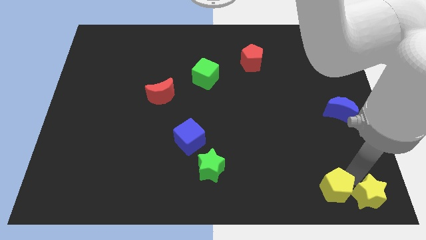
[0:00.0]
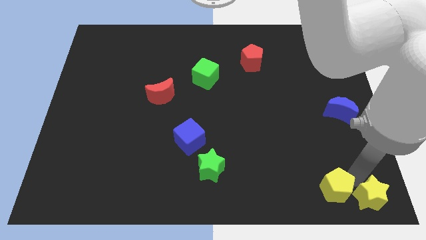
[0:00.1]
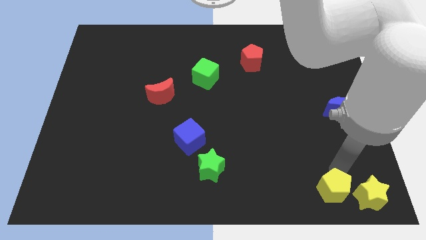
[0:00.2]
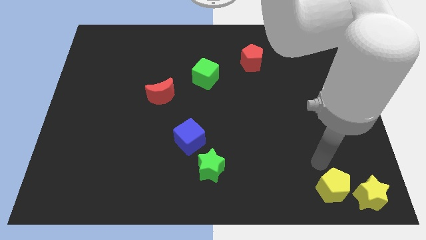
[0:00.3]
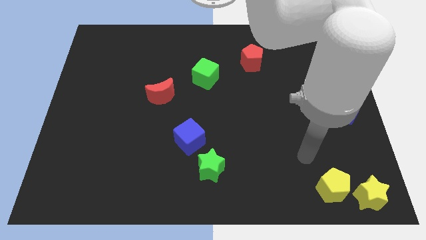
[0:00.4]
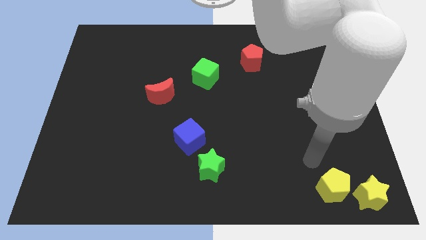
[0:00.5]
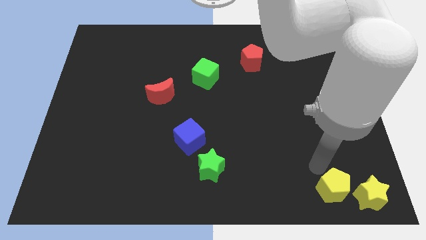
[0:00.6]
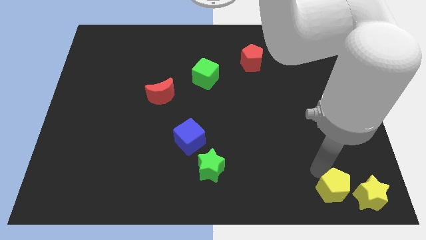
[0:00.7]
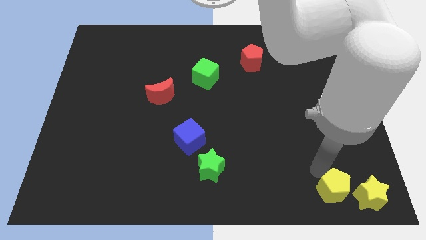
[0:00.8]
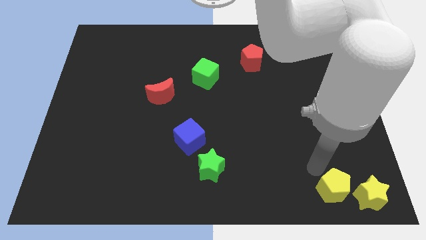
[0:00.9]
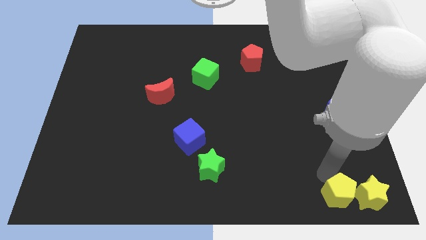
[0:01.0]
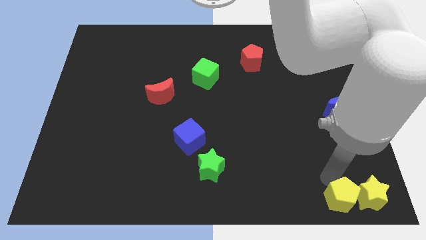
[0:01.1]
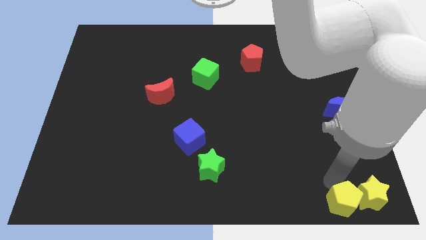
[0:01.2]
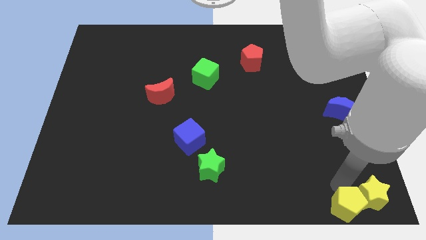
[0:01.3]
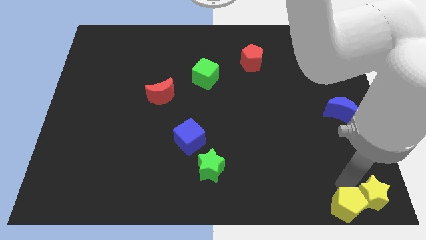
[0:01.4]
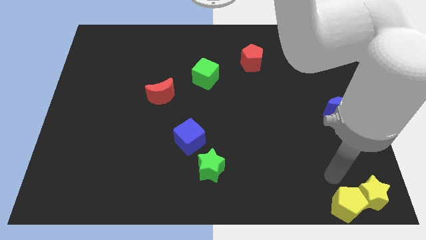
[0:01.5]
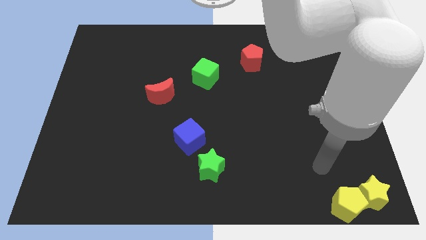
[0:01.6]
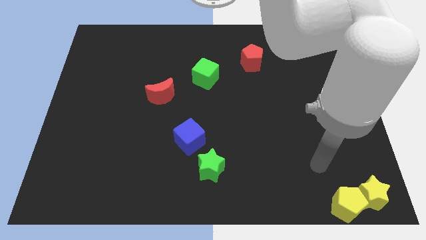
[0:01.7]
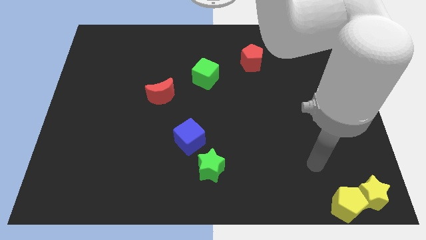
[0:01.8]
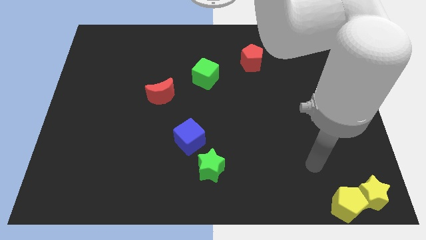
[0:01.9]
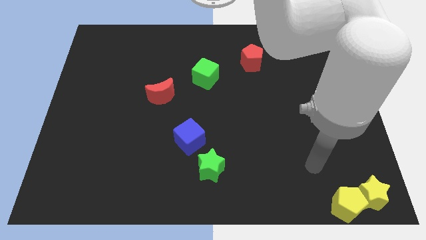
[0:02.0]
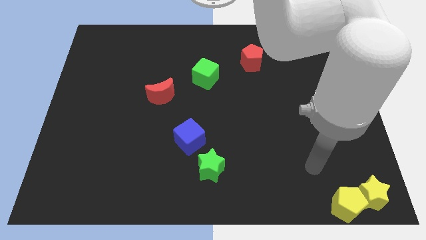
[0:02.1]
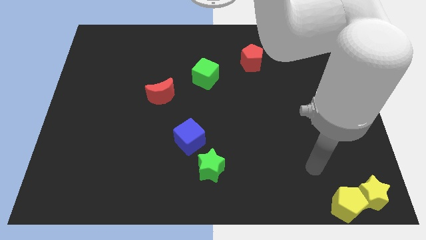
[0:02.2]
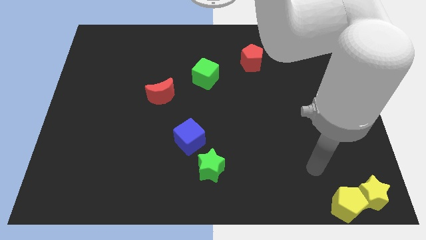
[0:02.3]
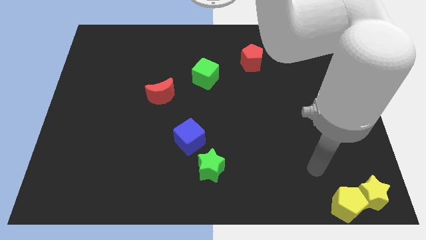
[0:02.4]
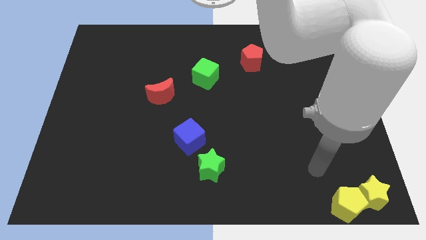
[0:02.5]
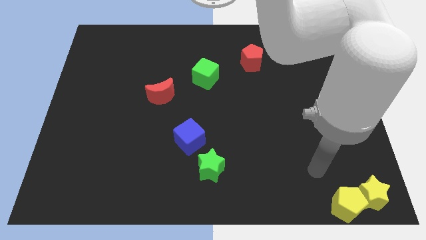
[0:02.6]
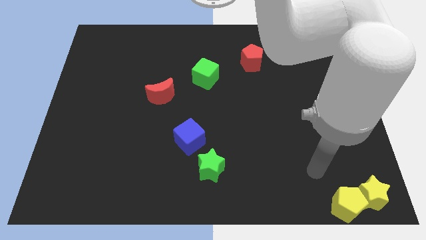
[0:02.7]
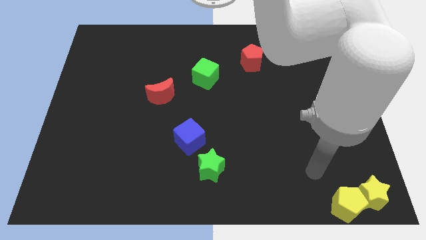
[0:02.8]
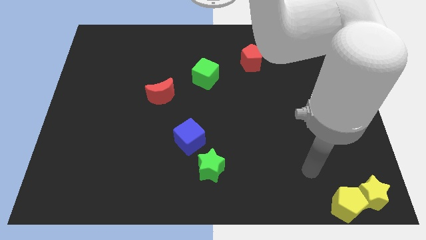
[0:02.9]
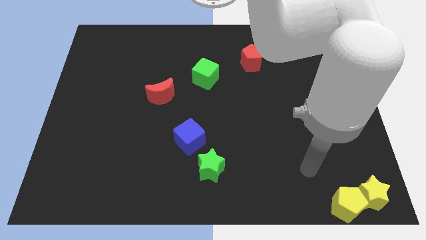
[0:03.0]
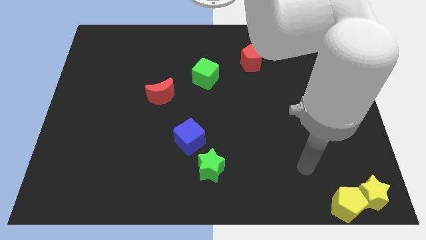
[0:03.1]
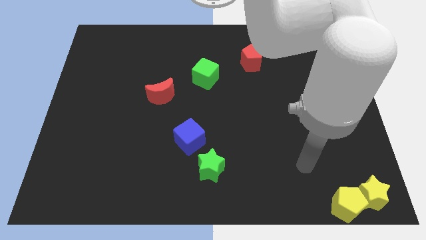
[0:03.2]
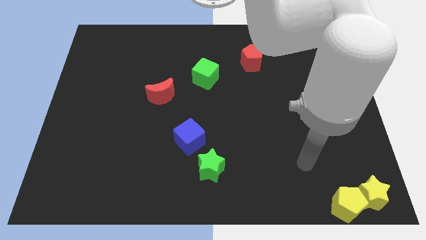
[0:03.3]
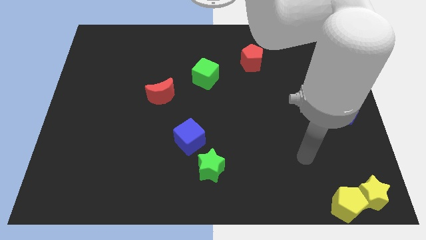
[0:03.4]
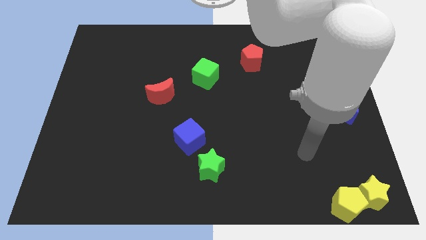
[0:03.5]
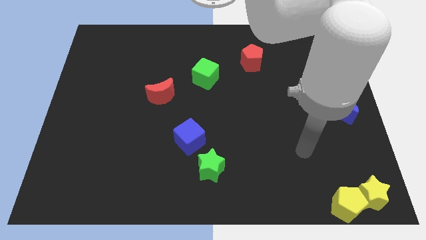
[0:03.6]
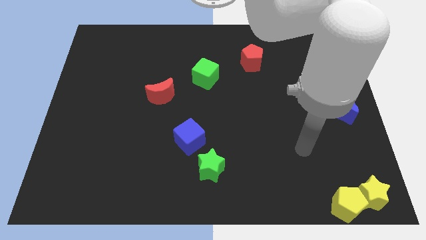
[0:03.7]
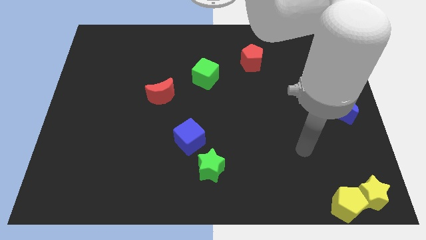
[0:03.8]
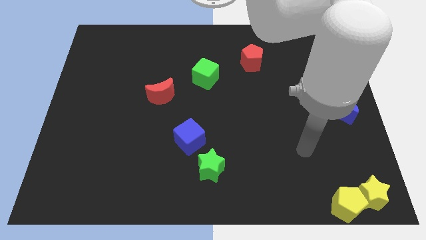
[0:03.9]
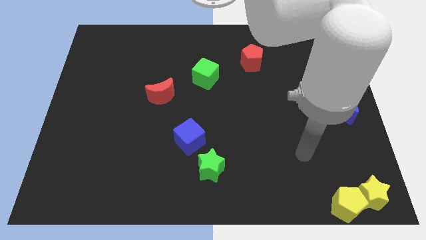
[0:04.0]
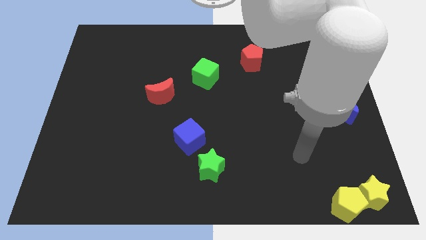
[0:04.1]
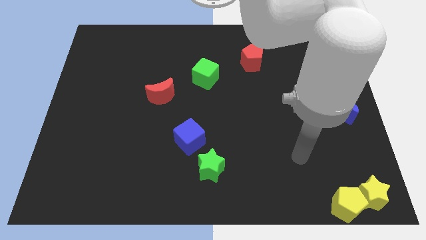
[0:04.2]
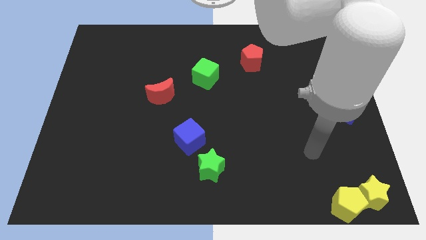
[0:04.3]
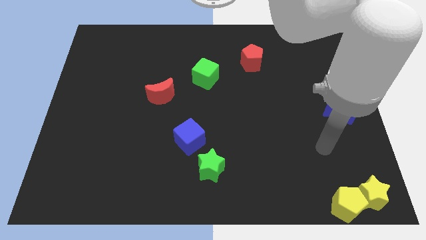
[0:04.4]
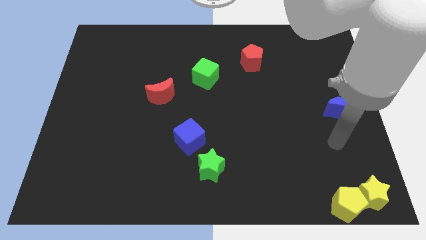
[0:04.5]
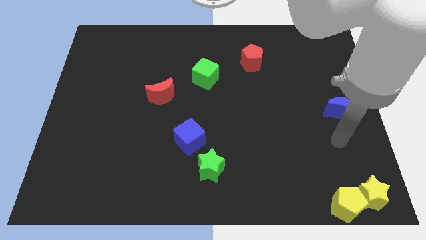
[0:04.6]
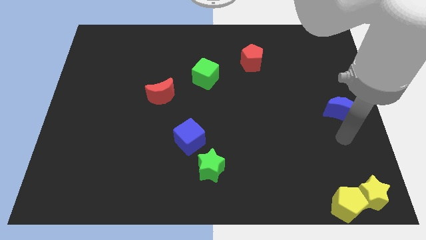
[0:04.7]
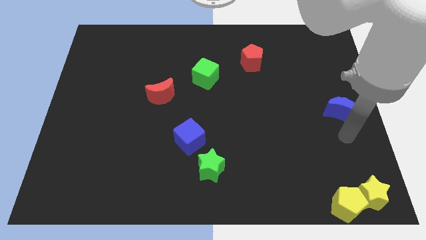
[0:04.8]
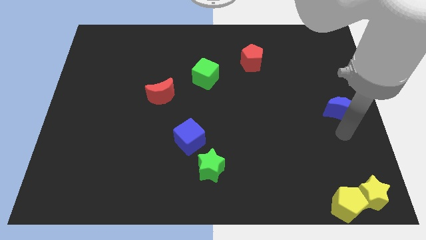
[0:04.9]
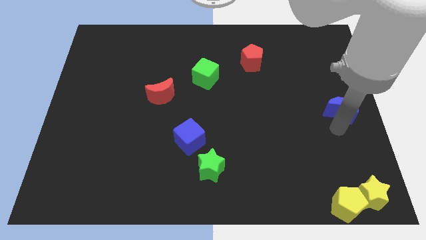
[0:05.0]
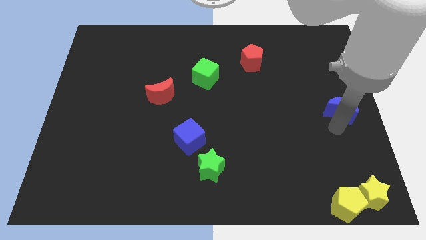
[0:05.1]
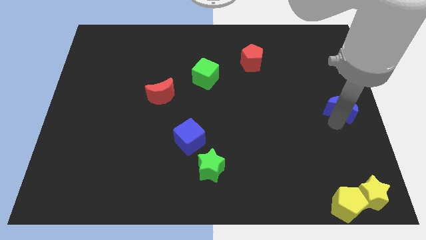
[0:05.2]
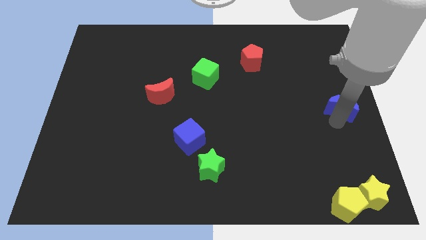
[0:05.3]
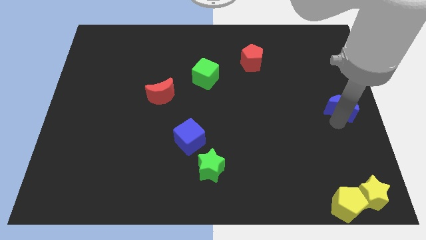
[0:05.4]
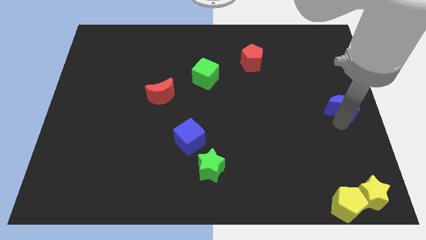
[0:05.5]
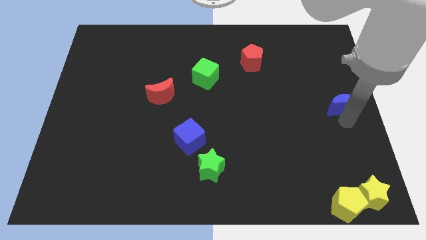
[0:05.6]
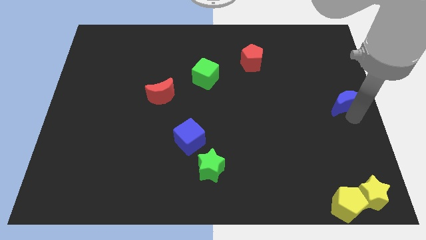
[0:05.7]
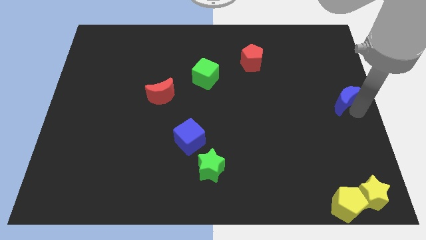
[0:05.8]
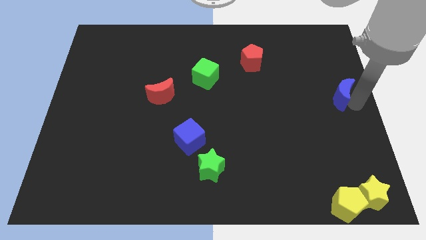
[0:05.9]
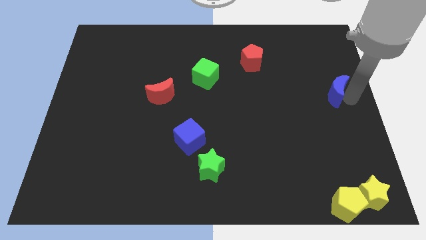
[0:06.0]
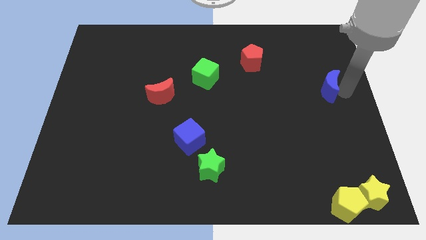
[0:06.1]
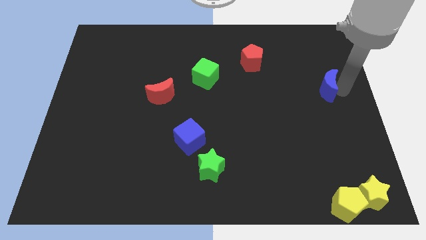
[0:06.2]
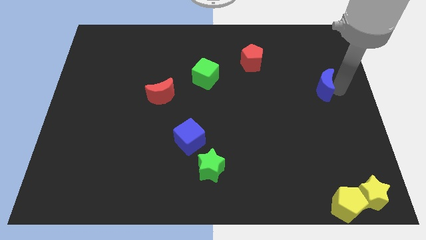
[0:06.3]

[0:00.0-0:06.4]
turn blue moon towards right

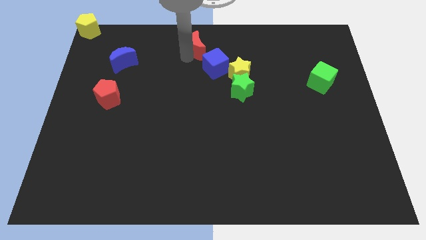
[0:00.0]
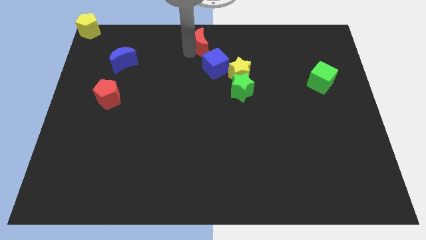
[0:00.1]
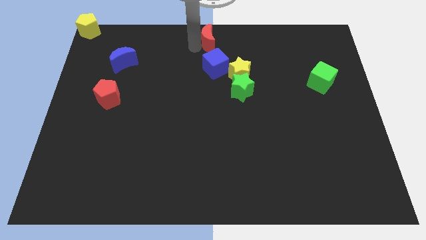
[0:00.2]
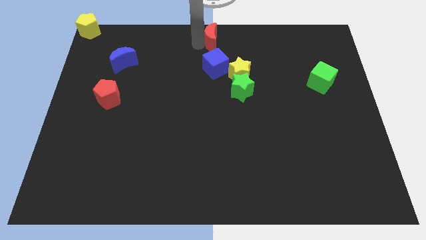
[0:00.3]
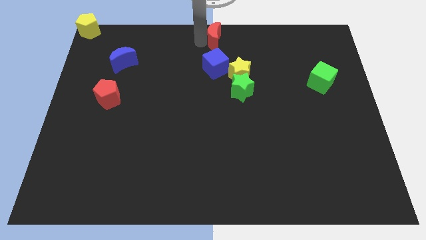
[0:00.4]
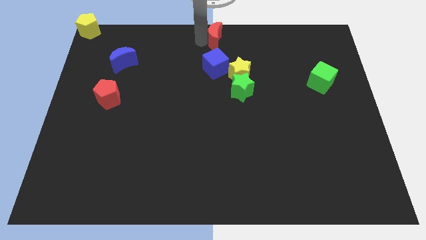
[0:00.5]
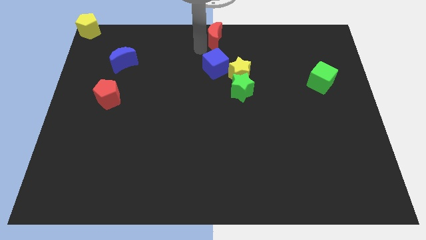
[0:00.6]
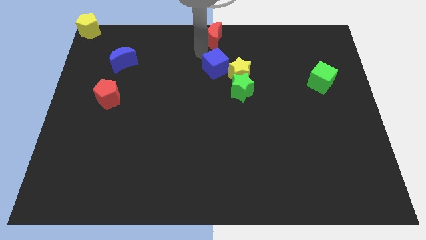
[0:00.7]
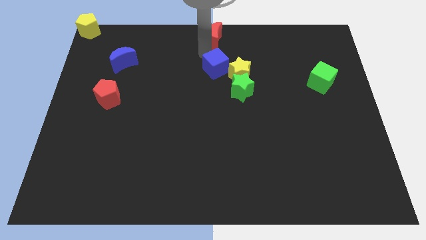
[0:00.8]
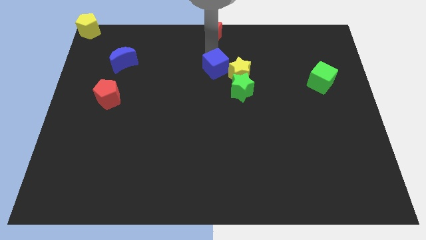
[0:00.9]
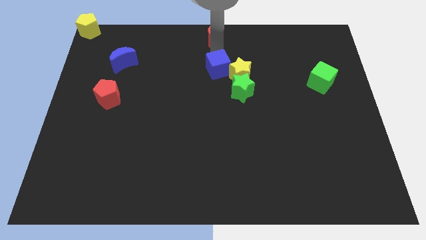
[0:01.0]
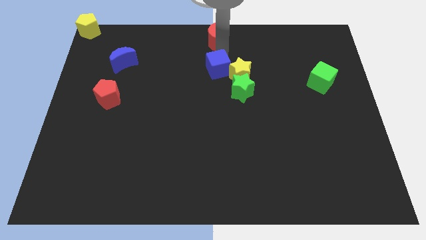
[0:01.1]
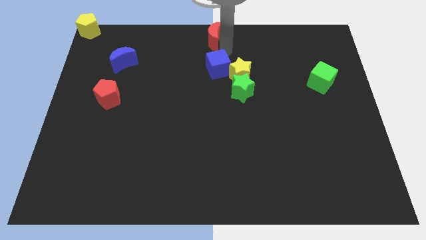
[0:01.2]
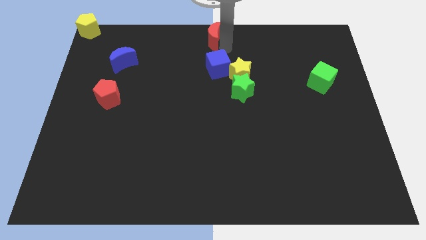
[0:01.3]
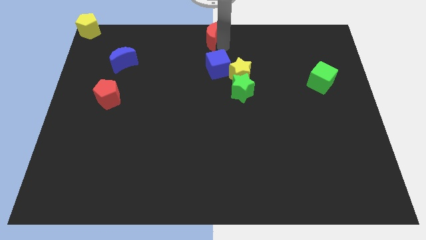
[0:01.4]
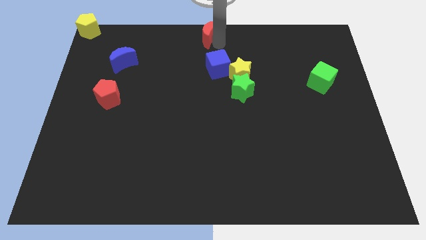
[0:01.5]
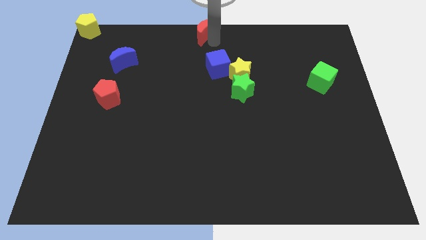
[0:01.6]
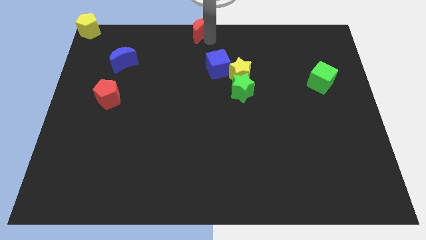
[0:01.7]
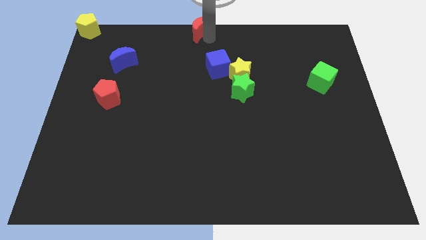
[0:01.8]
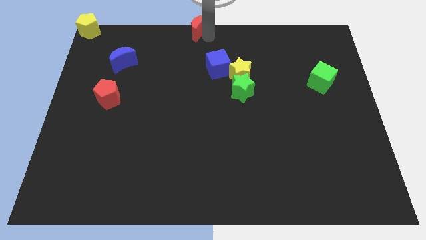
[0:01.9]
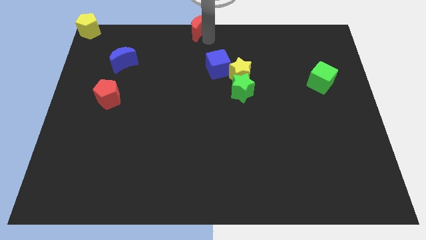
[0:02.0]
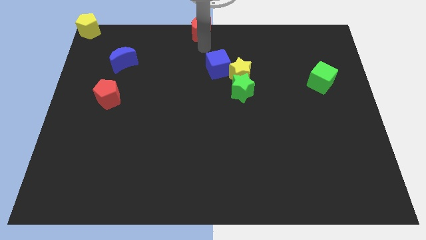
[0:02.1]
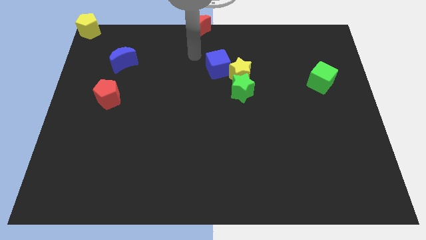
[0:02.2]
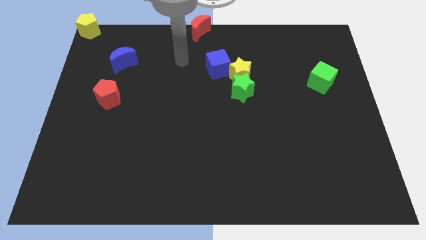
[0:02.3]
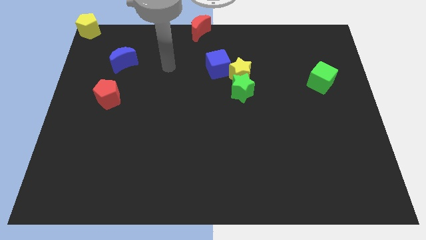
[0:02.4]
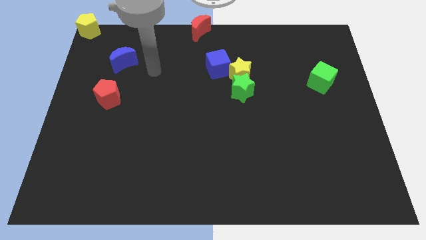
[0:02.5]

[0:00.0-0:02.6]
place red moon to the top center of the board
